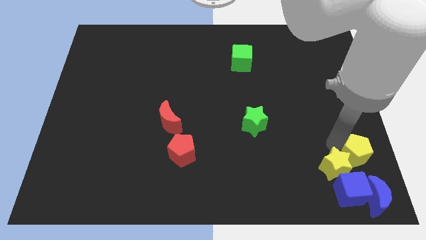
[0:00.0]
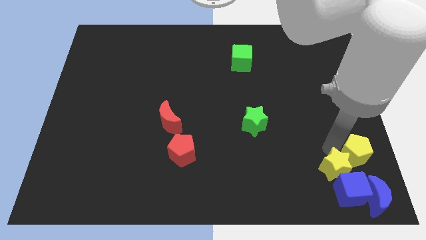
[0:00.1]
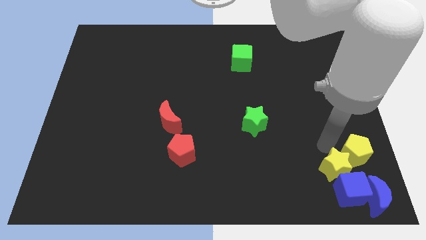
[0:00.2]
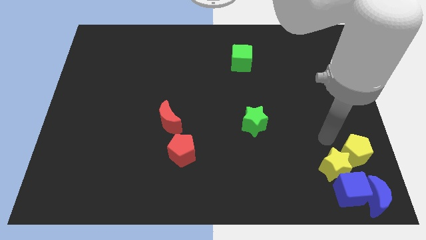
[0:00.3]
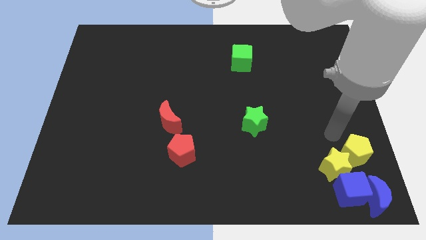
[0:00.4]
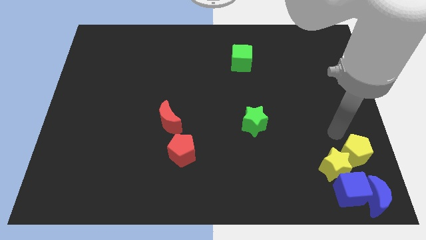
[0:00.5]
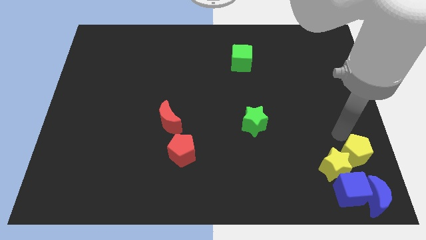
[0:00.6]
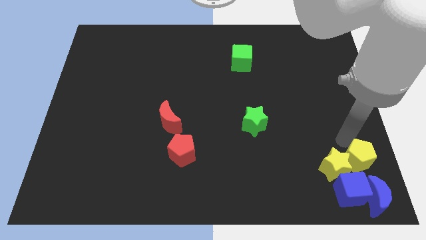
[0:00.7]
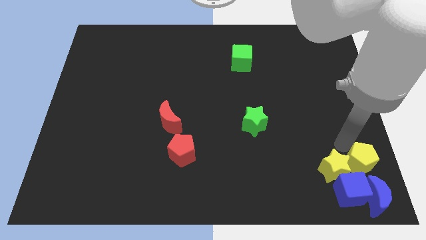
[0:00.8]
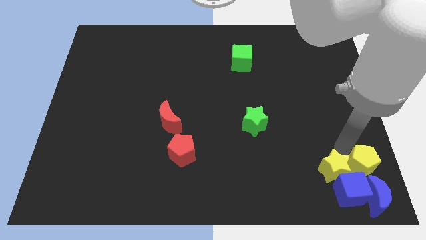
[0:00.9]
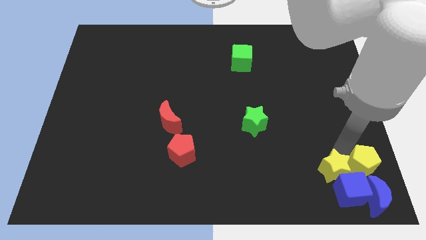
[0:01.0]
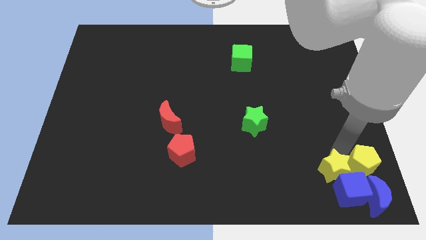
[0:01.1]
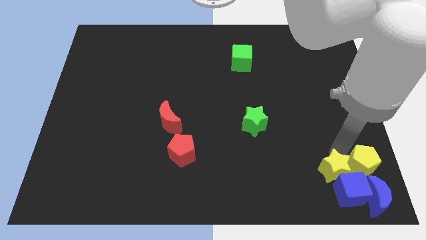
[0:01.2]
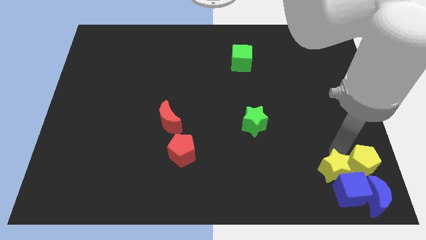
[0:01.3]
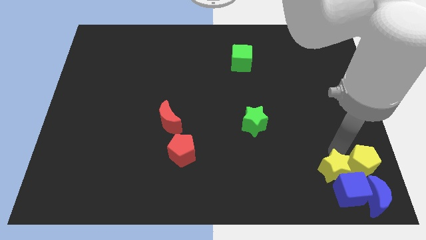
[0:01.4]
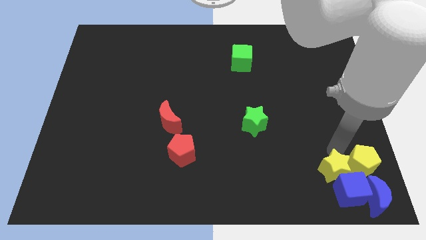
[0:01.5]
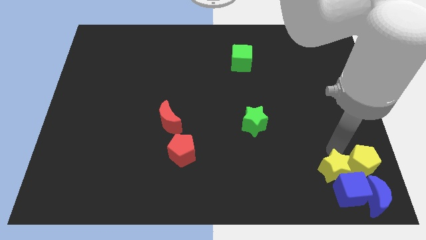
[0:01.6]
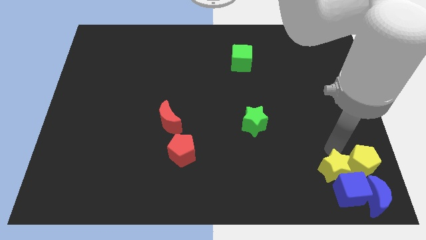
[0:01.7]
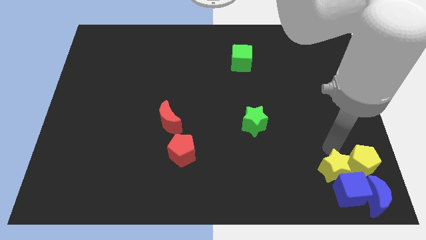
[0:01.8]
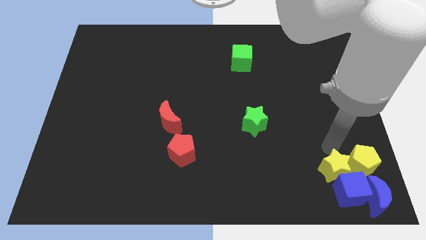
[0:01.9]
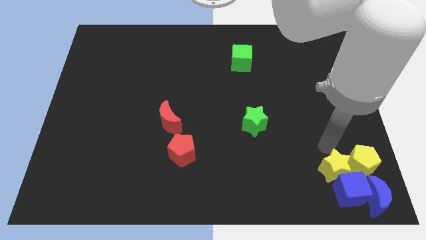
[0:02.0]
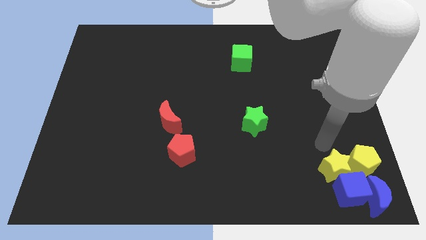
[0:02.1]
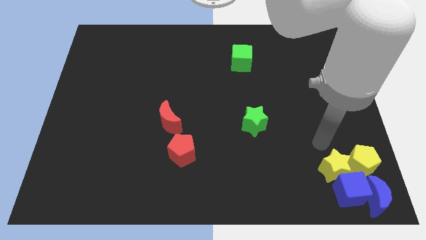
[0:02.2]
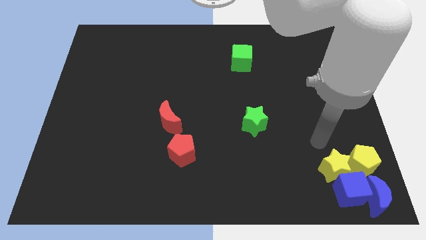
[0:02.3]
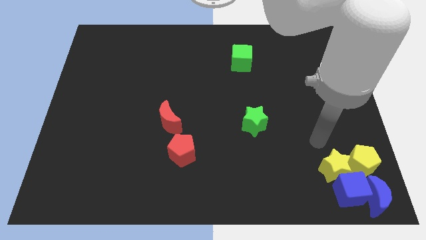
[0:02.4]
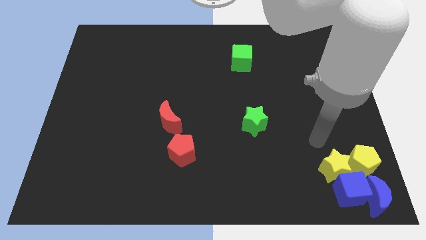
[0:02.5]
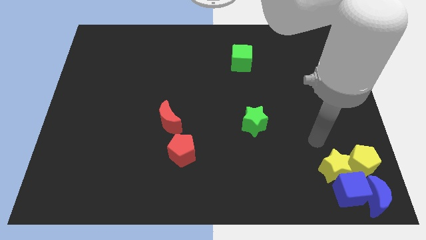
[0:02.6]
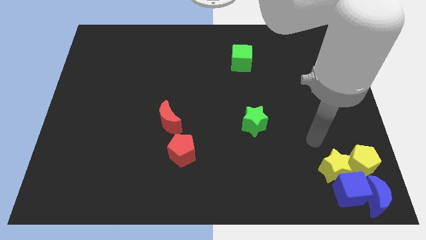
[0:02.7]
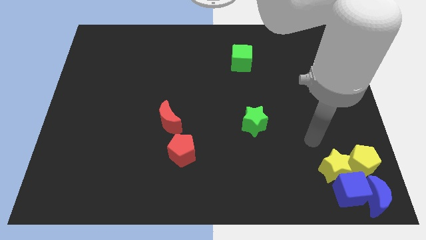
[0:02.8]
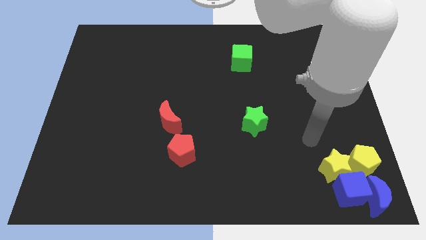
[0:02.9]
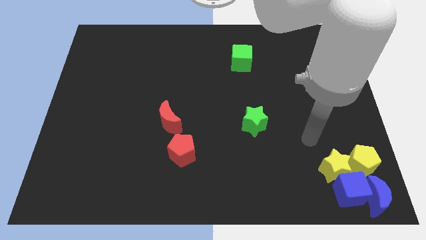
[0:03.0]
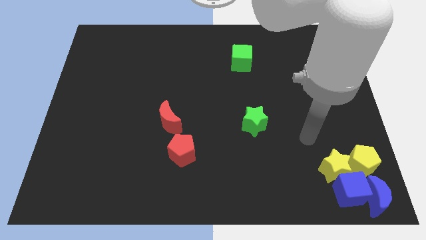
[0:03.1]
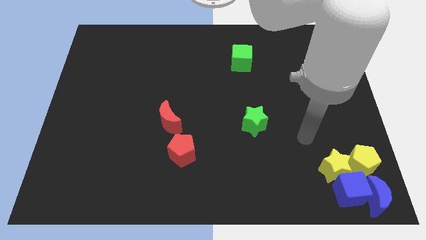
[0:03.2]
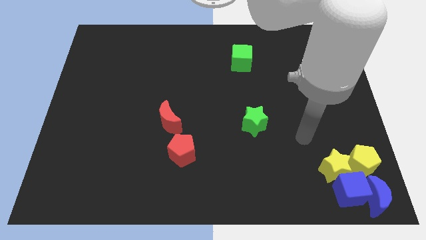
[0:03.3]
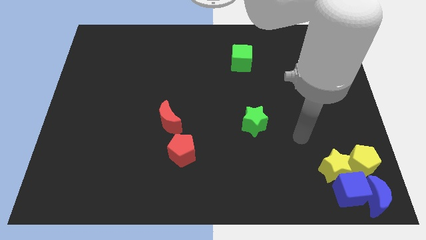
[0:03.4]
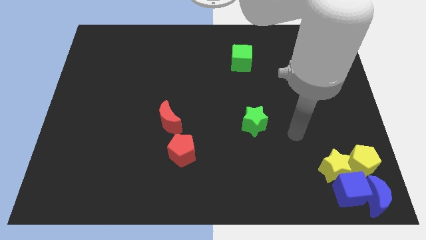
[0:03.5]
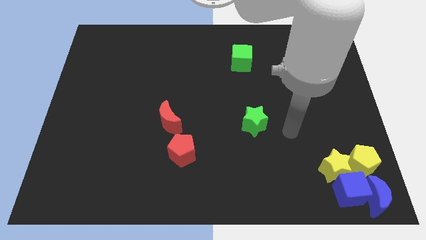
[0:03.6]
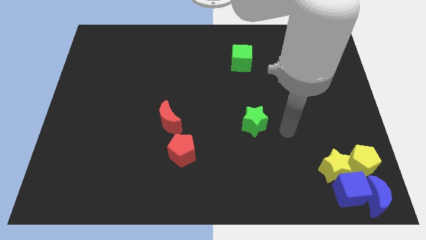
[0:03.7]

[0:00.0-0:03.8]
move your arm to the right side of the green star

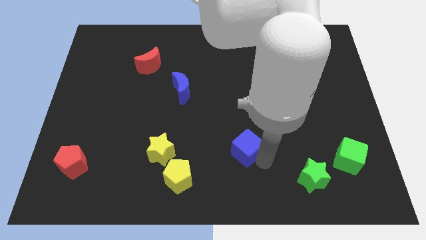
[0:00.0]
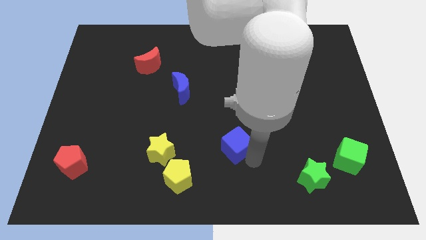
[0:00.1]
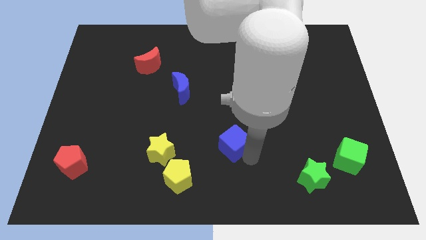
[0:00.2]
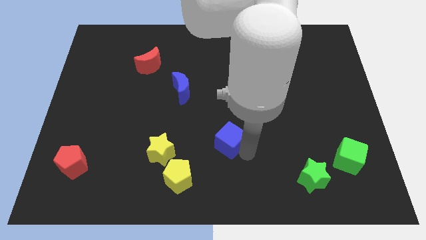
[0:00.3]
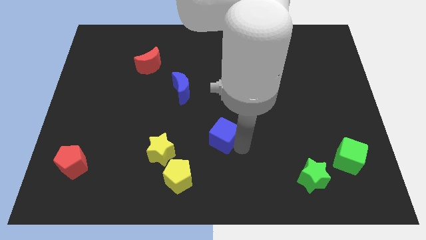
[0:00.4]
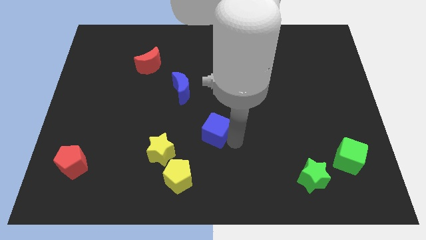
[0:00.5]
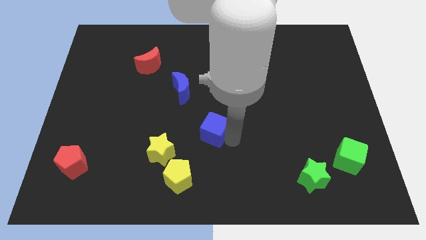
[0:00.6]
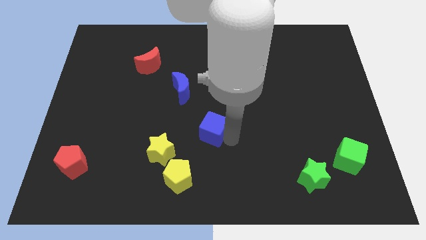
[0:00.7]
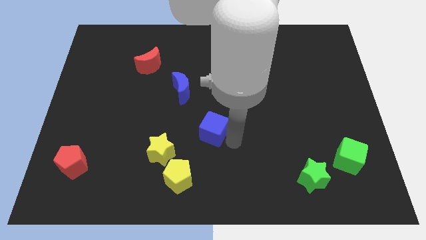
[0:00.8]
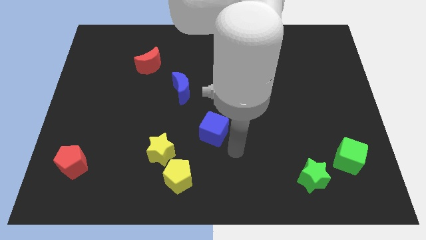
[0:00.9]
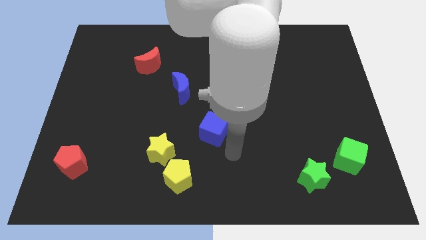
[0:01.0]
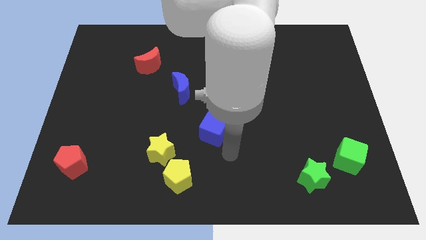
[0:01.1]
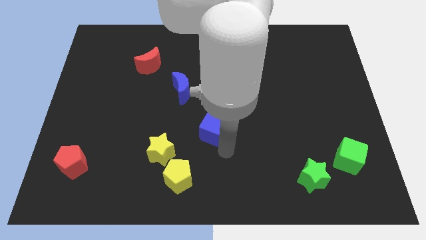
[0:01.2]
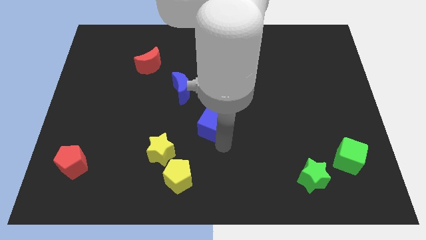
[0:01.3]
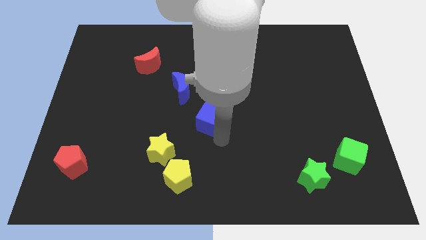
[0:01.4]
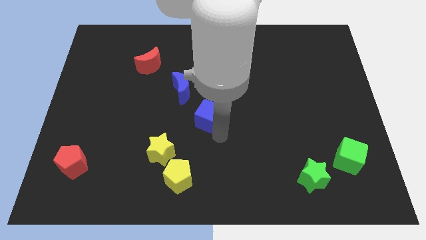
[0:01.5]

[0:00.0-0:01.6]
push blue cube towards the blue crescent

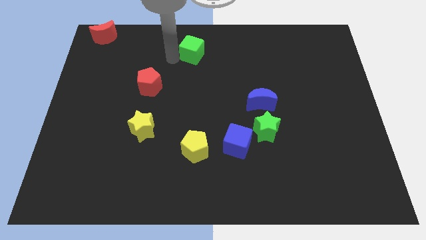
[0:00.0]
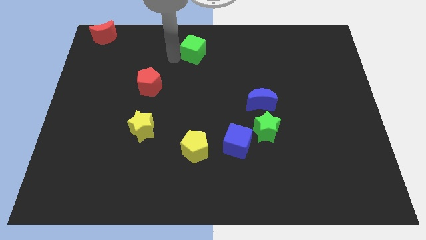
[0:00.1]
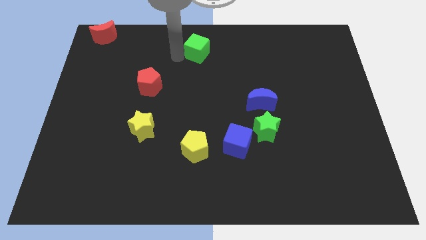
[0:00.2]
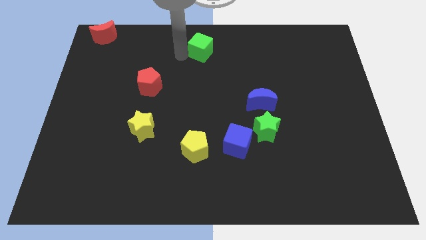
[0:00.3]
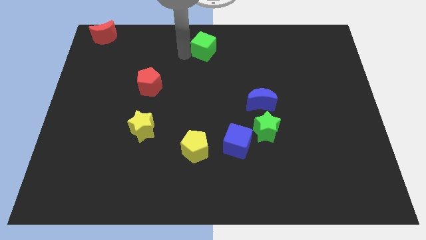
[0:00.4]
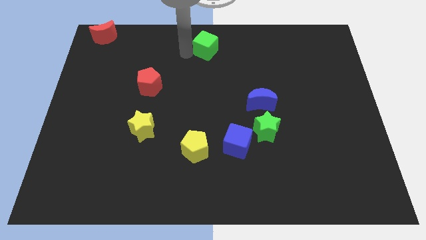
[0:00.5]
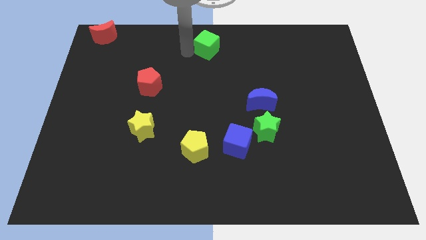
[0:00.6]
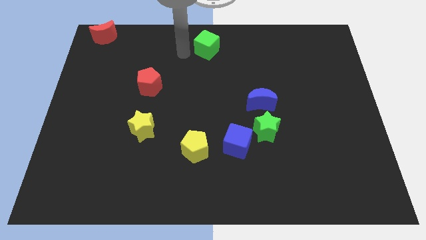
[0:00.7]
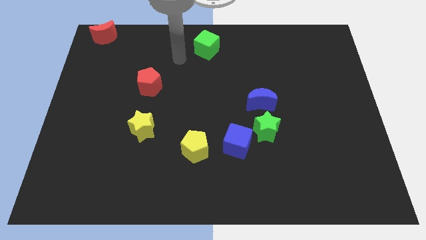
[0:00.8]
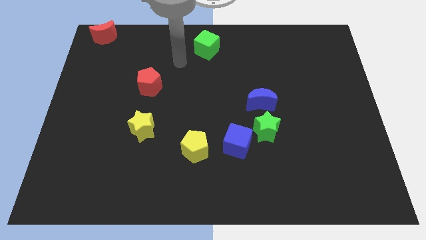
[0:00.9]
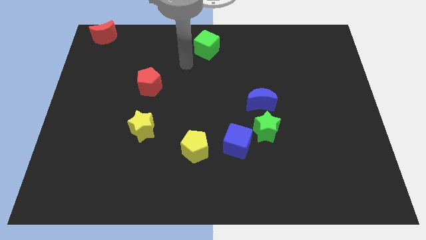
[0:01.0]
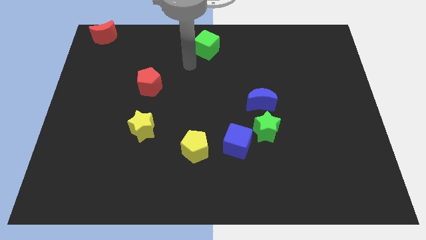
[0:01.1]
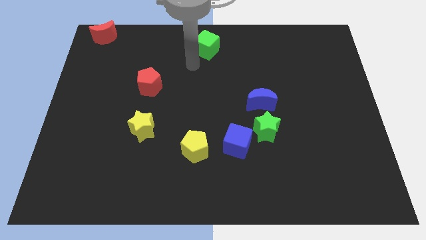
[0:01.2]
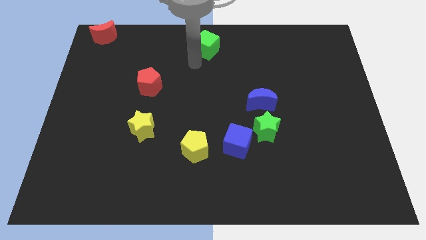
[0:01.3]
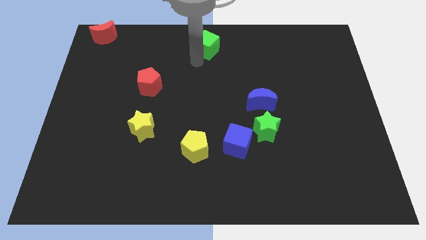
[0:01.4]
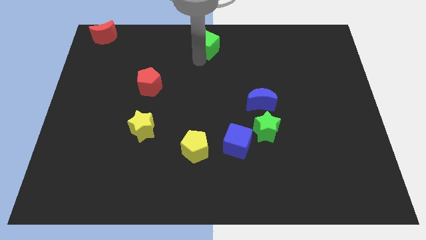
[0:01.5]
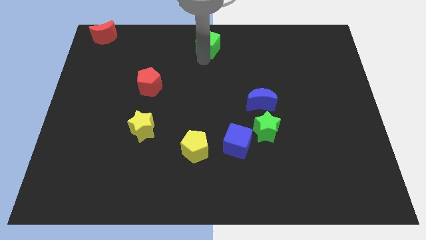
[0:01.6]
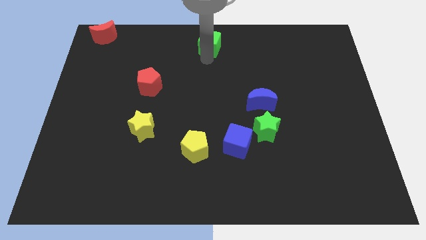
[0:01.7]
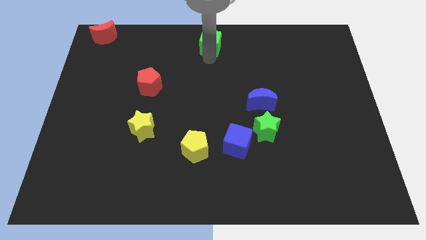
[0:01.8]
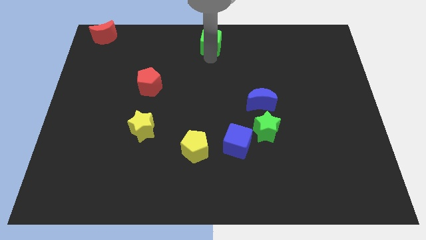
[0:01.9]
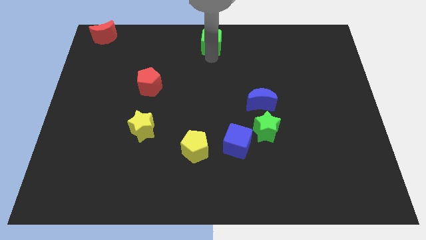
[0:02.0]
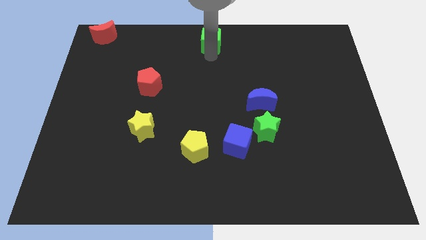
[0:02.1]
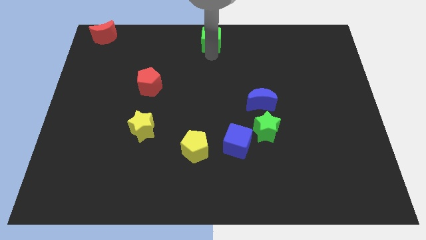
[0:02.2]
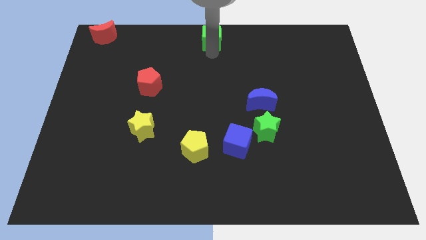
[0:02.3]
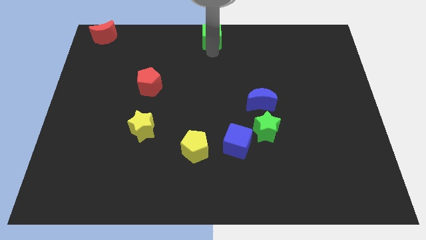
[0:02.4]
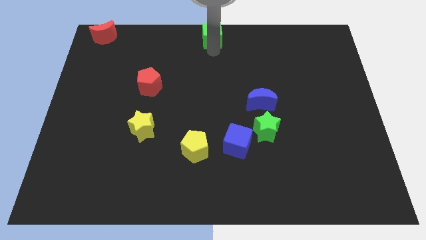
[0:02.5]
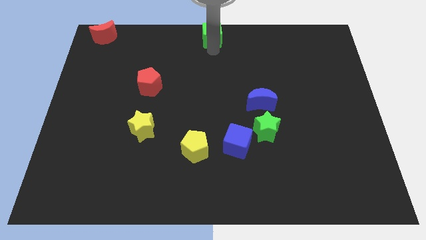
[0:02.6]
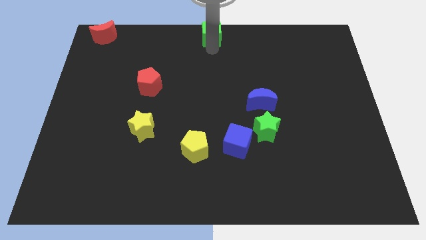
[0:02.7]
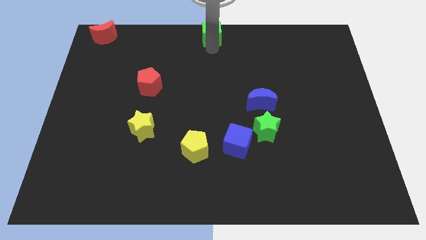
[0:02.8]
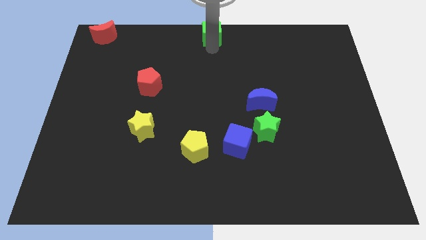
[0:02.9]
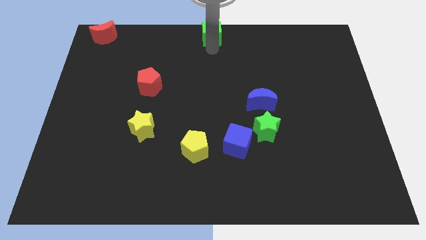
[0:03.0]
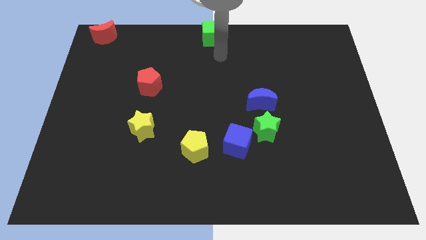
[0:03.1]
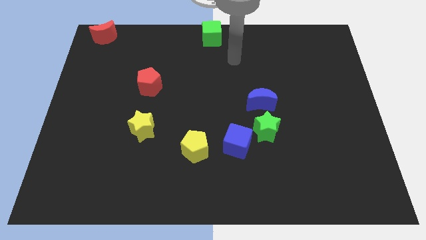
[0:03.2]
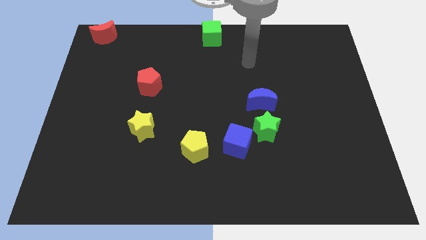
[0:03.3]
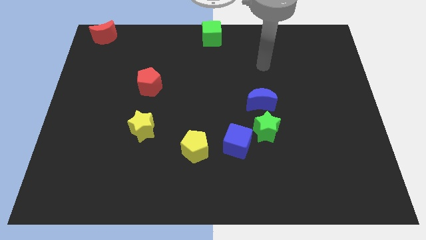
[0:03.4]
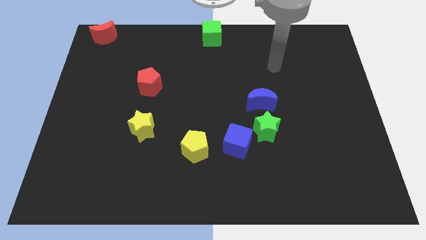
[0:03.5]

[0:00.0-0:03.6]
move green cube at top center
